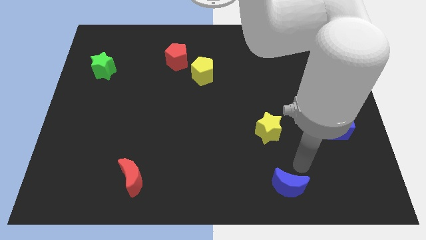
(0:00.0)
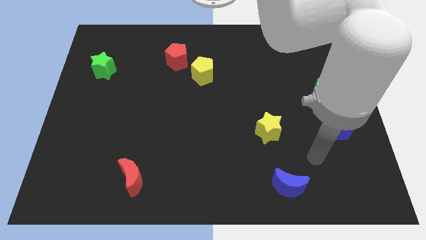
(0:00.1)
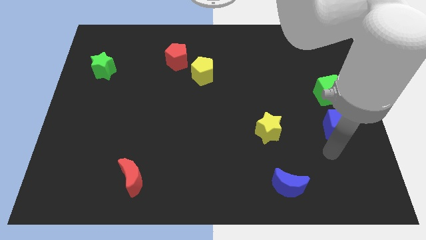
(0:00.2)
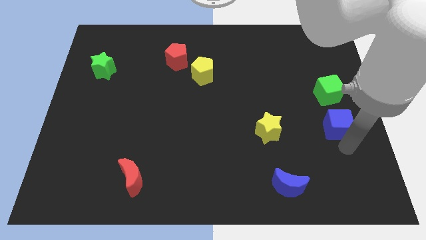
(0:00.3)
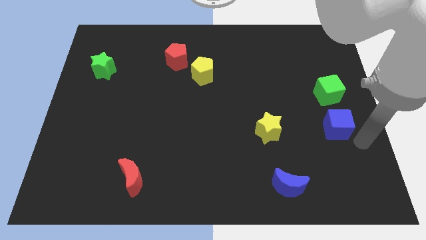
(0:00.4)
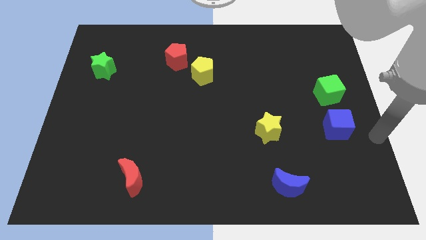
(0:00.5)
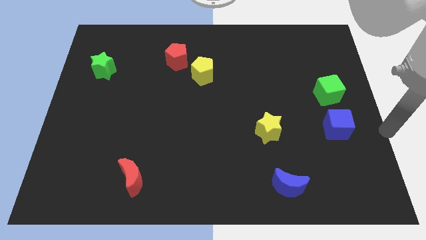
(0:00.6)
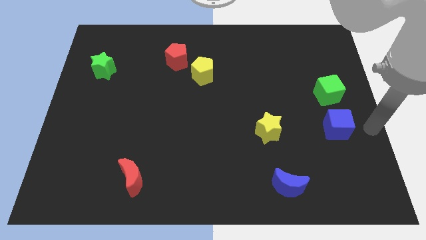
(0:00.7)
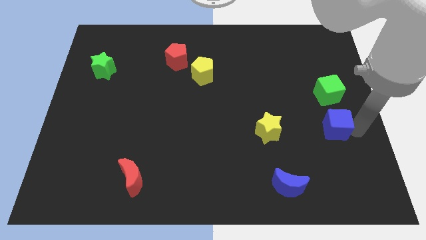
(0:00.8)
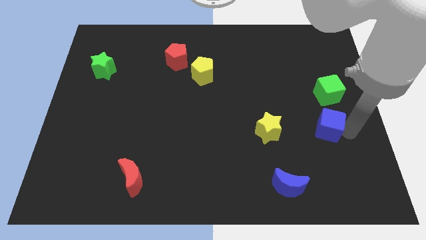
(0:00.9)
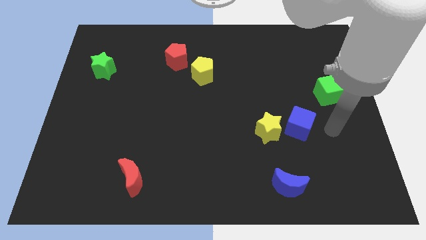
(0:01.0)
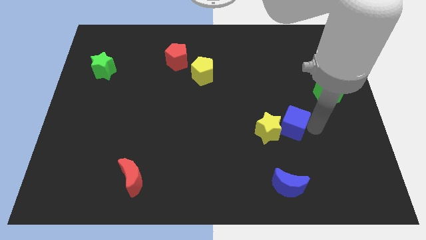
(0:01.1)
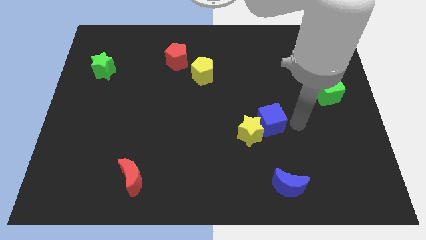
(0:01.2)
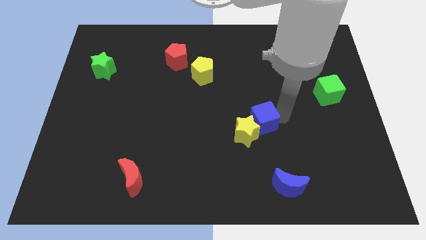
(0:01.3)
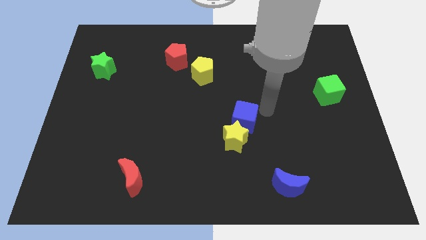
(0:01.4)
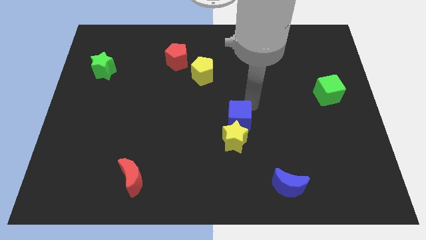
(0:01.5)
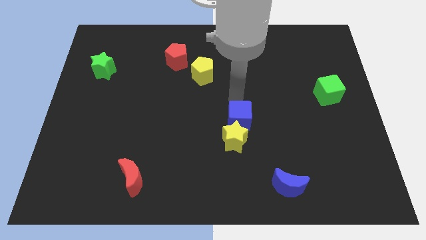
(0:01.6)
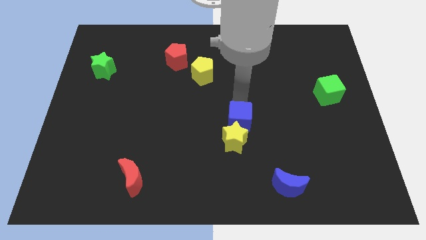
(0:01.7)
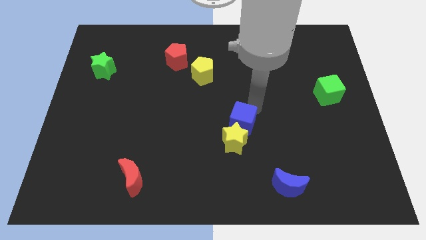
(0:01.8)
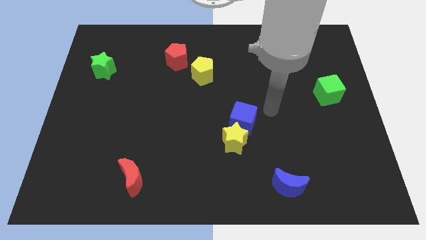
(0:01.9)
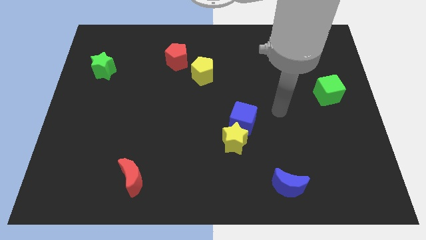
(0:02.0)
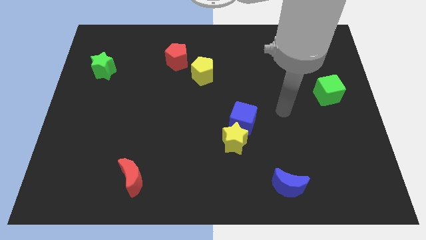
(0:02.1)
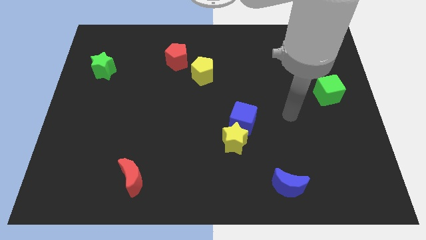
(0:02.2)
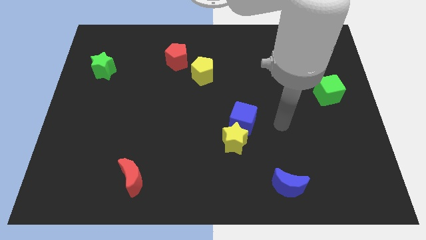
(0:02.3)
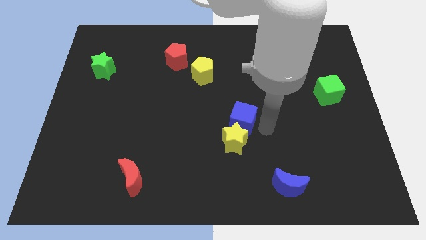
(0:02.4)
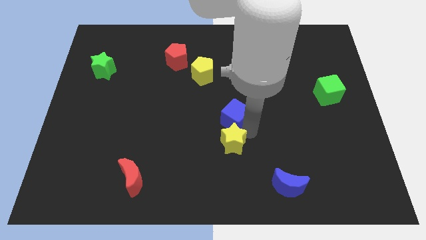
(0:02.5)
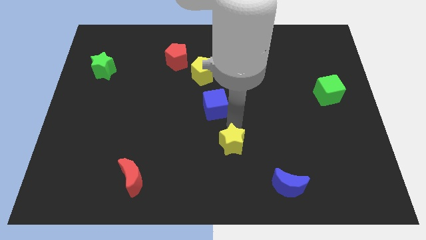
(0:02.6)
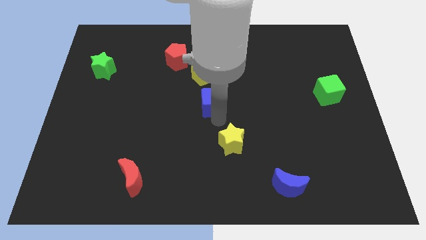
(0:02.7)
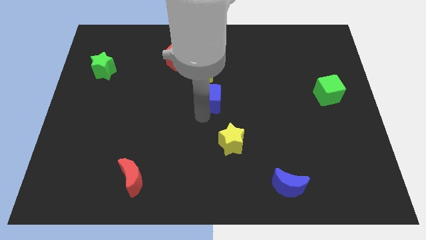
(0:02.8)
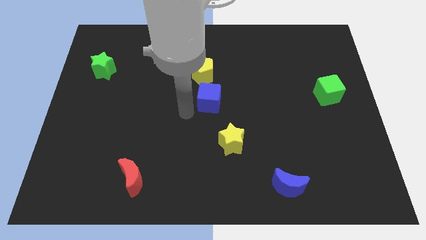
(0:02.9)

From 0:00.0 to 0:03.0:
push the blue cube and yellow star to the left side of the board

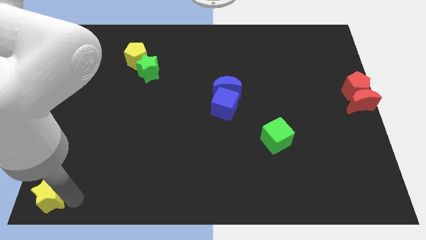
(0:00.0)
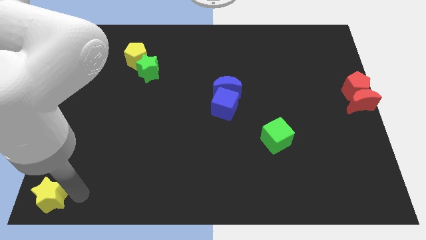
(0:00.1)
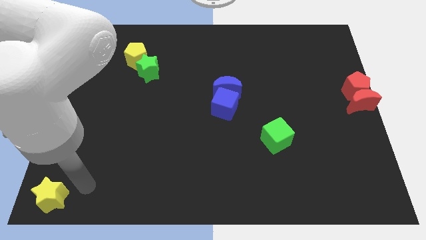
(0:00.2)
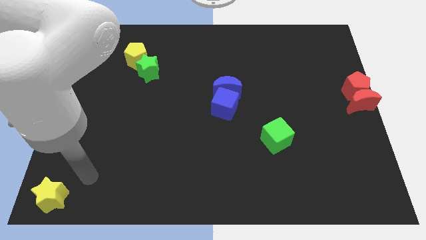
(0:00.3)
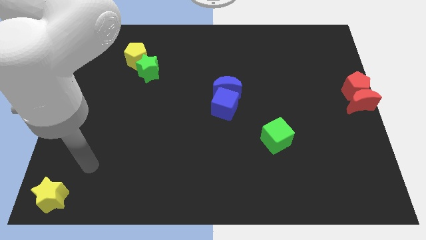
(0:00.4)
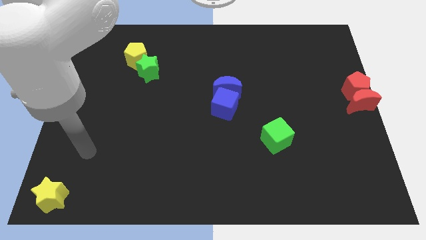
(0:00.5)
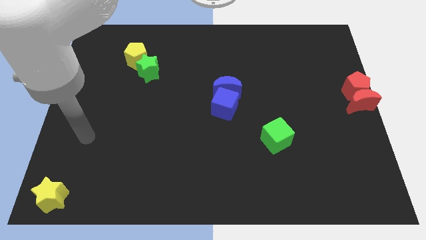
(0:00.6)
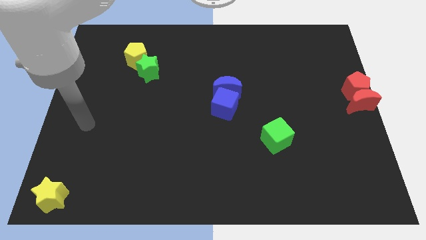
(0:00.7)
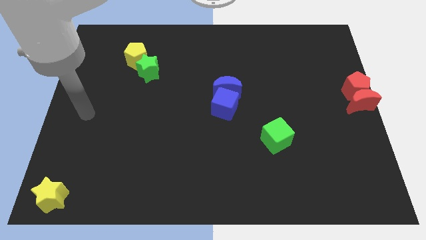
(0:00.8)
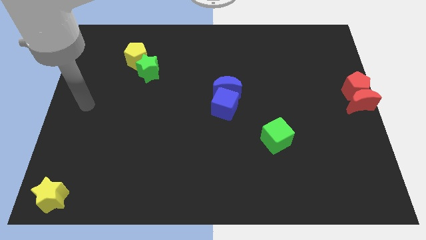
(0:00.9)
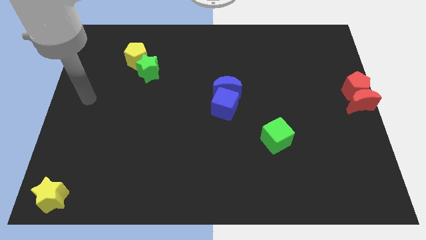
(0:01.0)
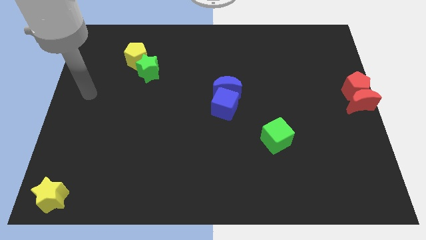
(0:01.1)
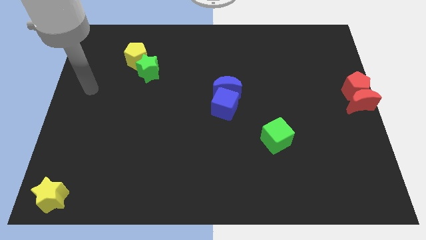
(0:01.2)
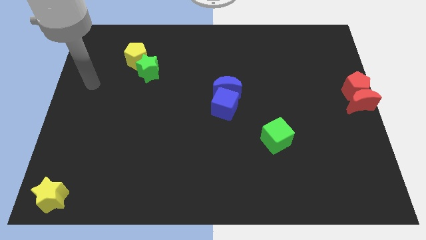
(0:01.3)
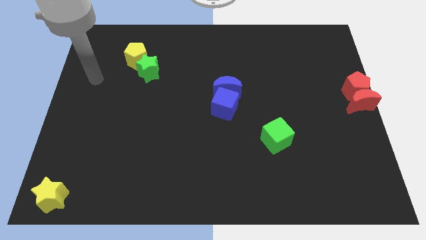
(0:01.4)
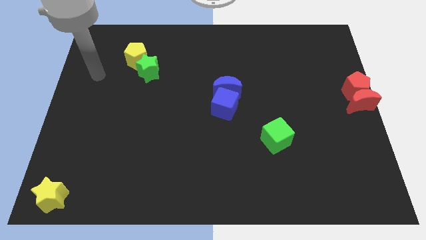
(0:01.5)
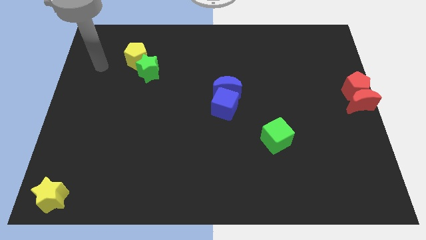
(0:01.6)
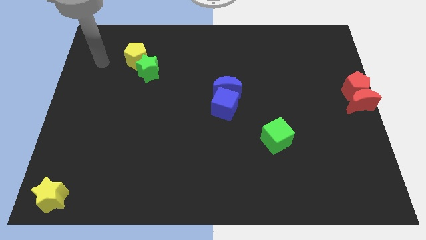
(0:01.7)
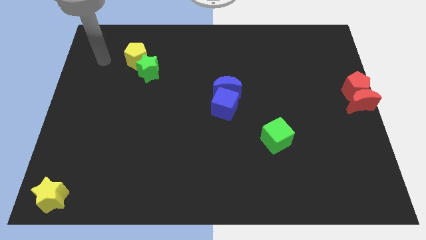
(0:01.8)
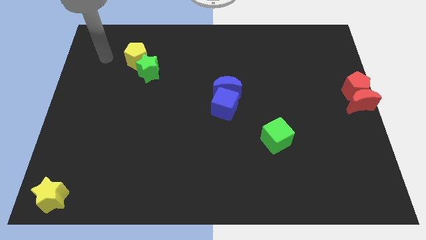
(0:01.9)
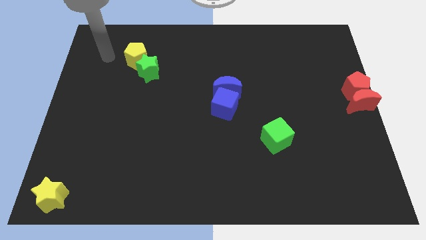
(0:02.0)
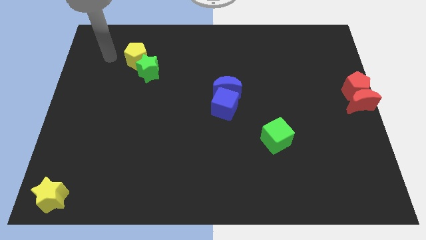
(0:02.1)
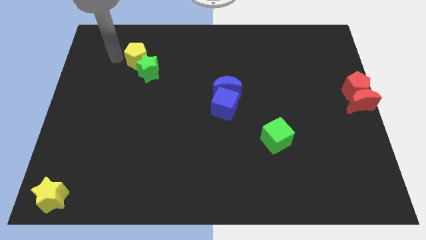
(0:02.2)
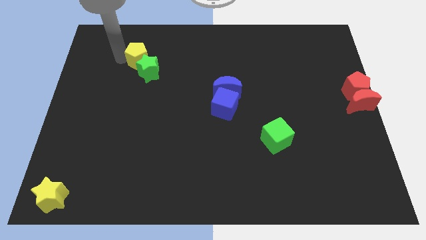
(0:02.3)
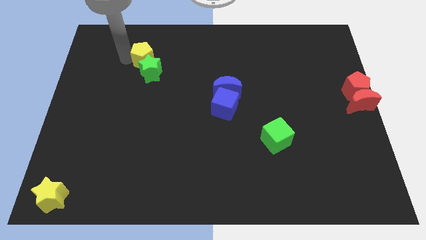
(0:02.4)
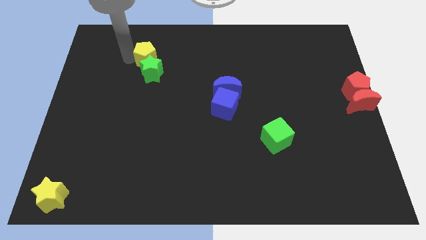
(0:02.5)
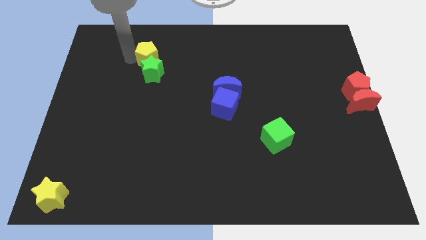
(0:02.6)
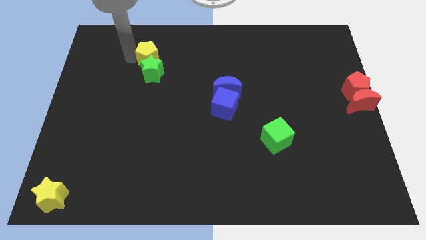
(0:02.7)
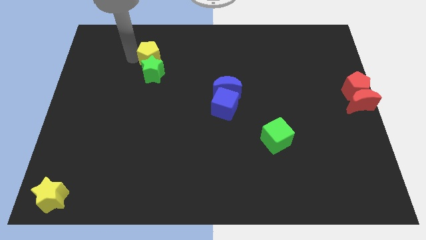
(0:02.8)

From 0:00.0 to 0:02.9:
push the yellow pentagon and green star towards the right side of the board

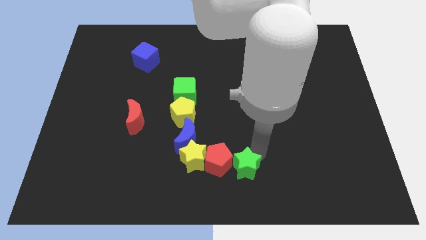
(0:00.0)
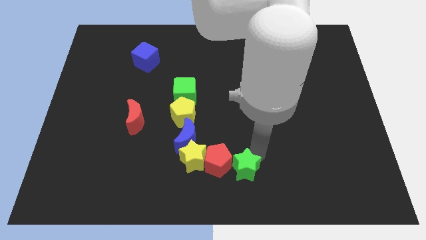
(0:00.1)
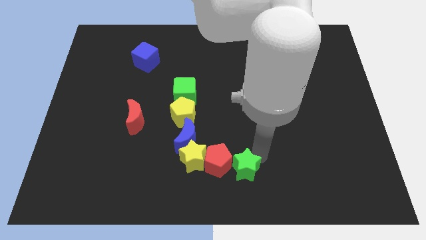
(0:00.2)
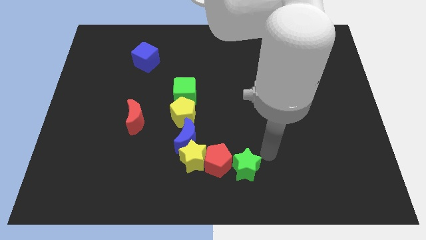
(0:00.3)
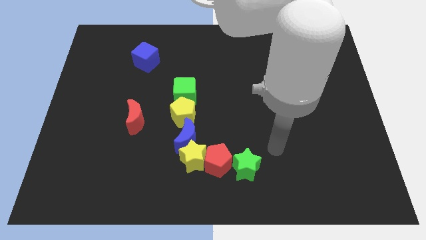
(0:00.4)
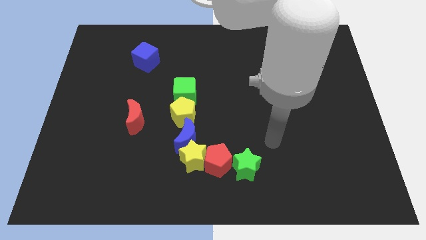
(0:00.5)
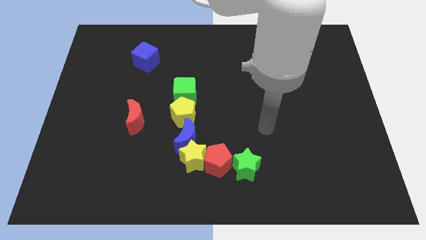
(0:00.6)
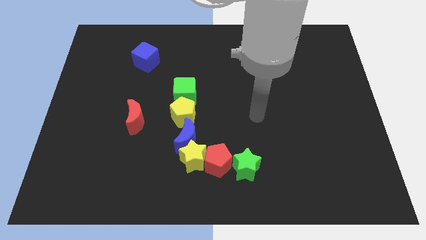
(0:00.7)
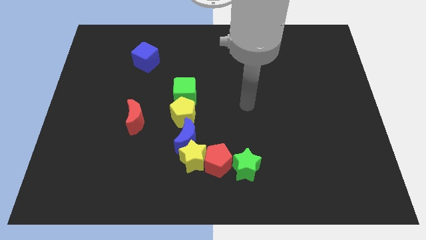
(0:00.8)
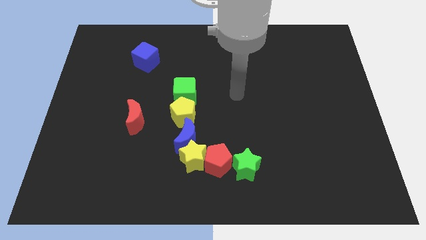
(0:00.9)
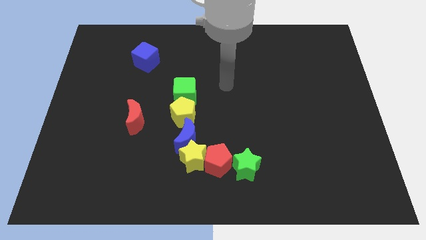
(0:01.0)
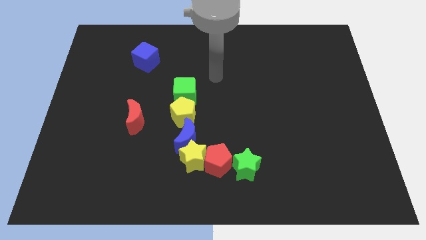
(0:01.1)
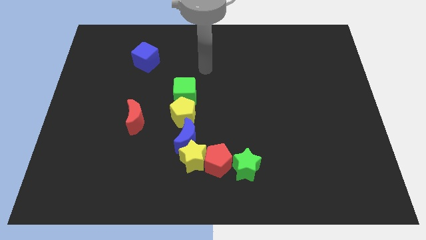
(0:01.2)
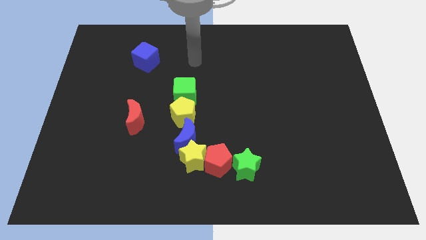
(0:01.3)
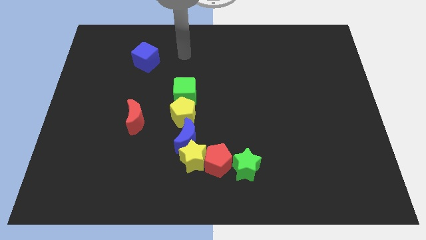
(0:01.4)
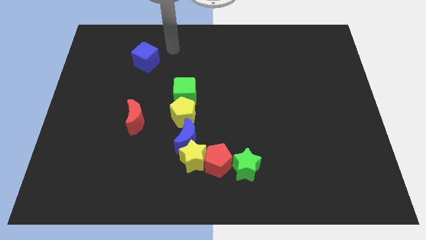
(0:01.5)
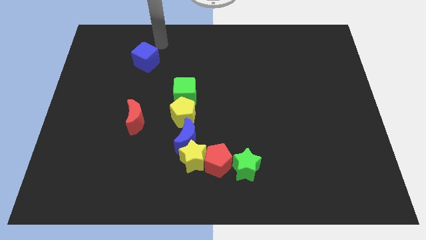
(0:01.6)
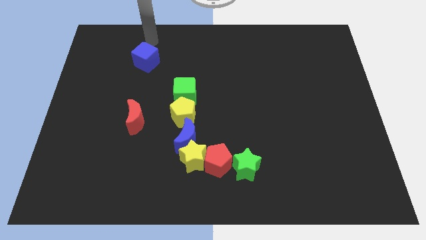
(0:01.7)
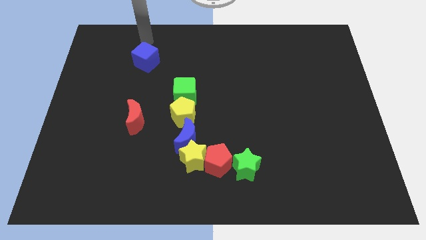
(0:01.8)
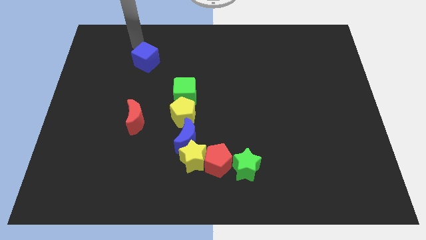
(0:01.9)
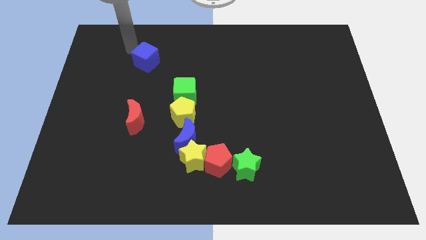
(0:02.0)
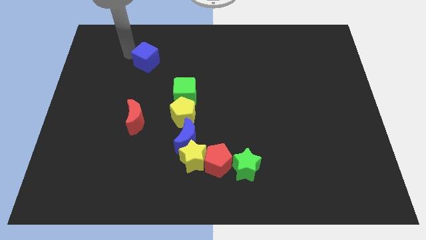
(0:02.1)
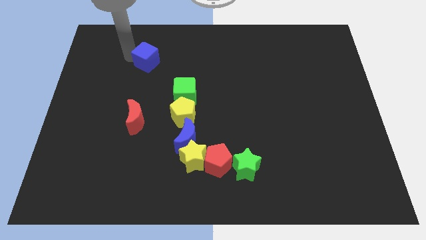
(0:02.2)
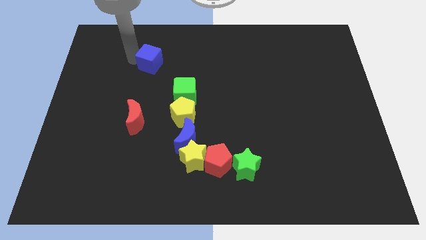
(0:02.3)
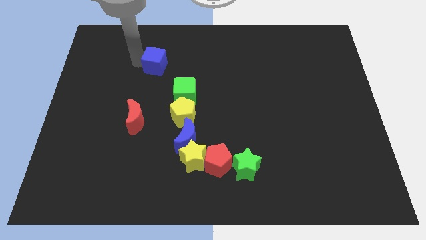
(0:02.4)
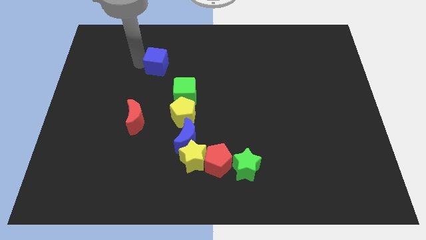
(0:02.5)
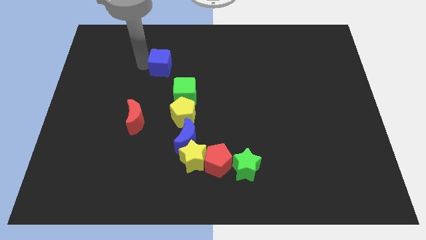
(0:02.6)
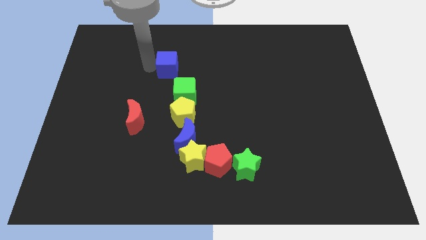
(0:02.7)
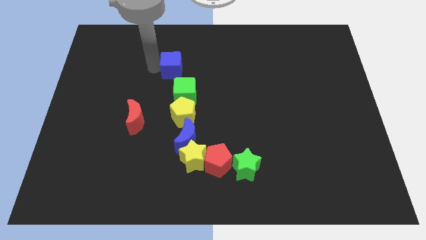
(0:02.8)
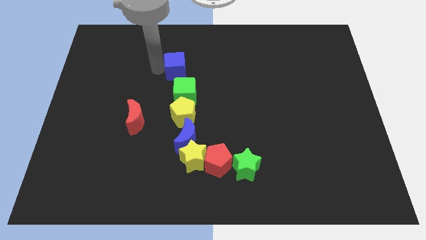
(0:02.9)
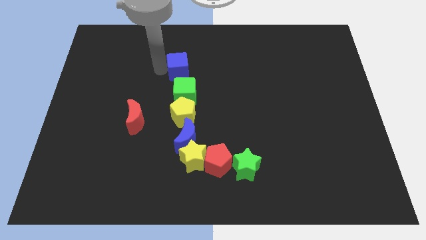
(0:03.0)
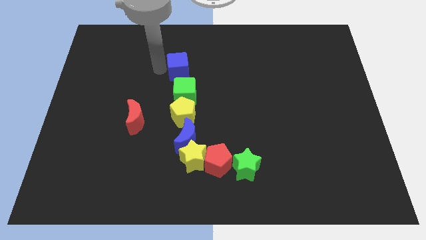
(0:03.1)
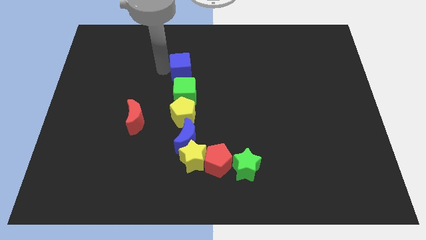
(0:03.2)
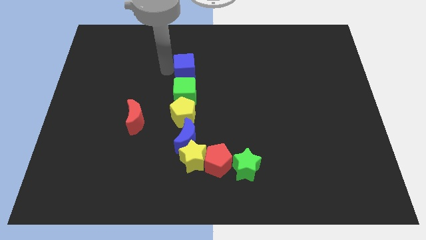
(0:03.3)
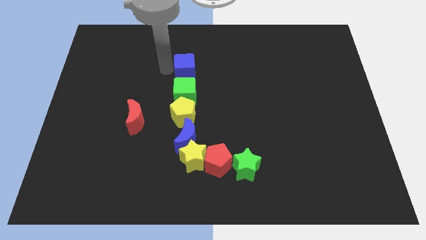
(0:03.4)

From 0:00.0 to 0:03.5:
move the blue cube above the green cube
